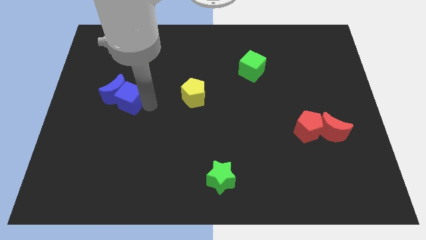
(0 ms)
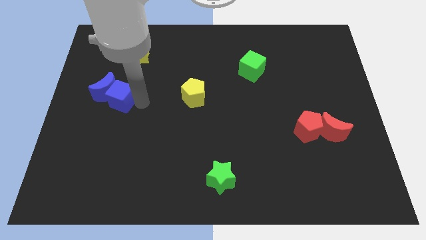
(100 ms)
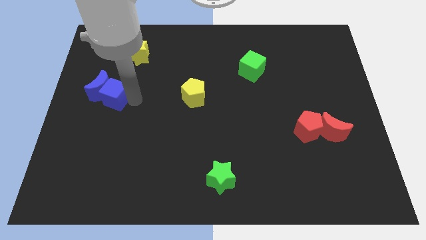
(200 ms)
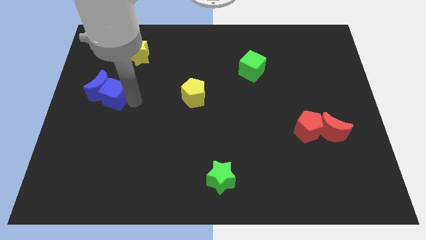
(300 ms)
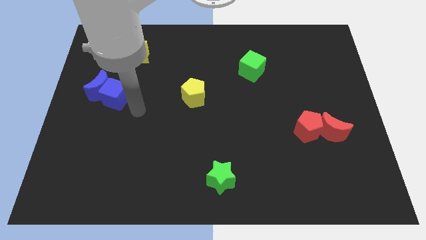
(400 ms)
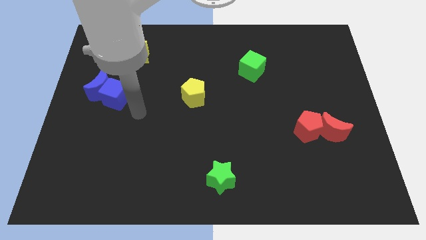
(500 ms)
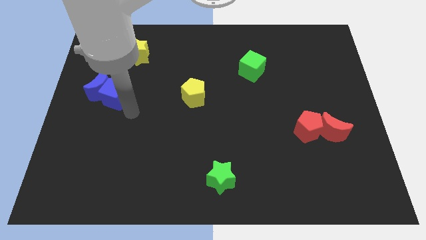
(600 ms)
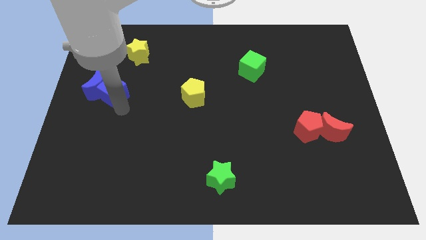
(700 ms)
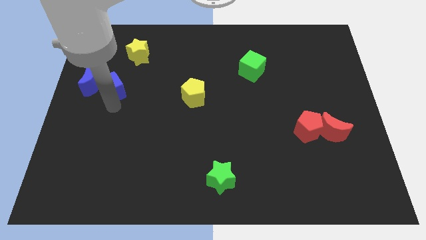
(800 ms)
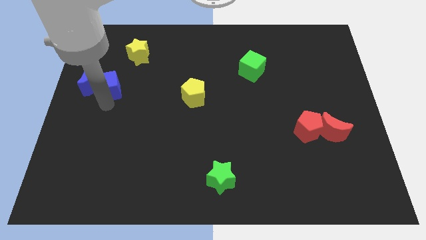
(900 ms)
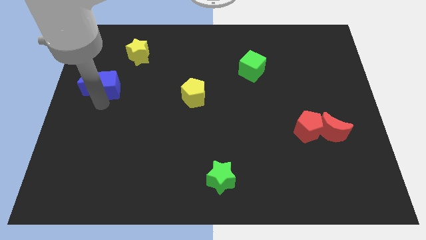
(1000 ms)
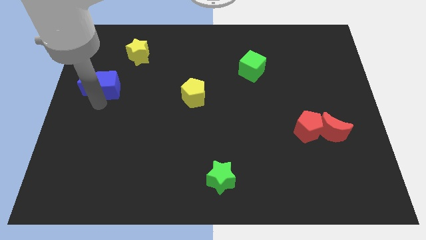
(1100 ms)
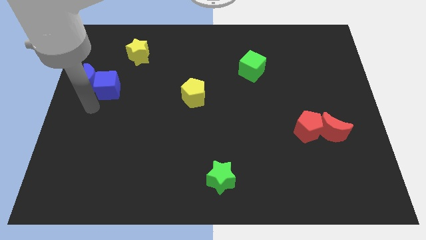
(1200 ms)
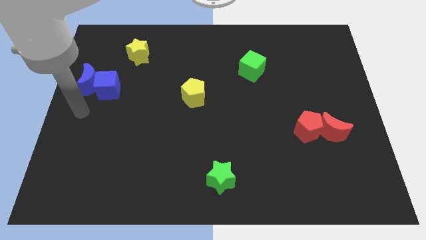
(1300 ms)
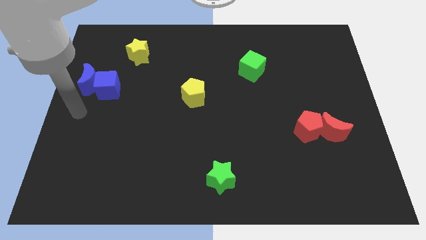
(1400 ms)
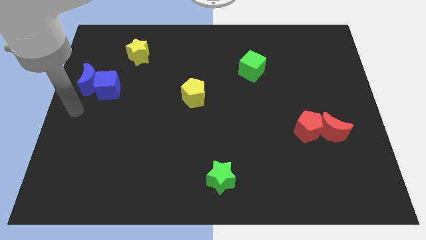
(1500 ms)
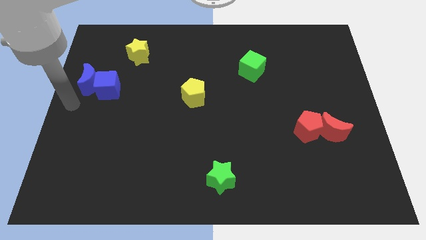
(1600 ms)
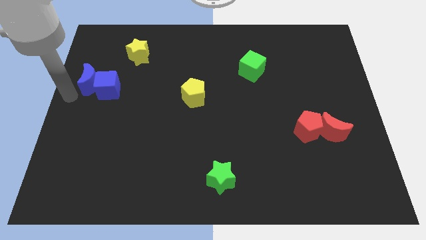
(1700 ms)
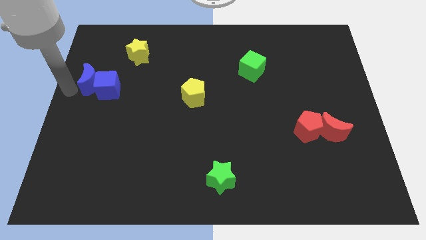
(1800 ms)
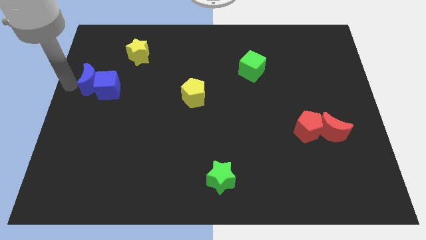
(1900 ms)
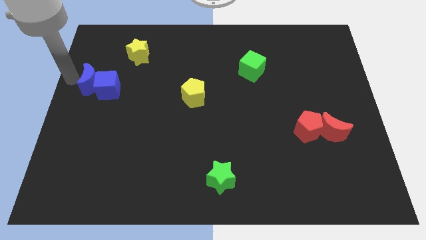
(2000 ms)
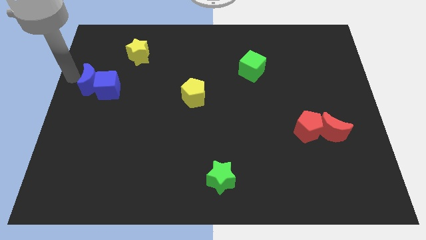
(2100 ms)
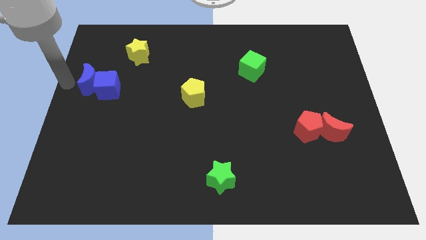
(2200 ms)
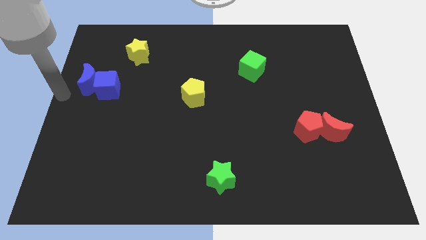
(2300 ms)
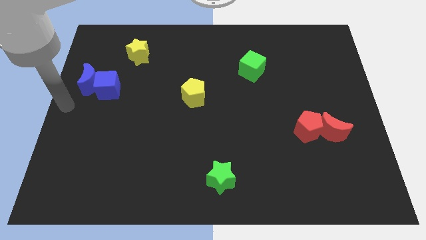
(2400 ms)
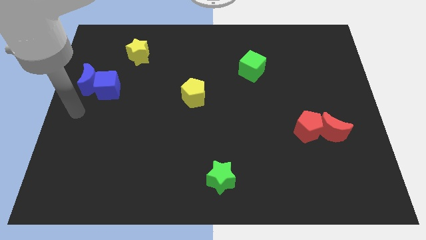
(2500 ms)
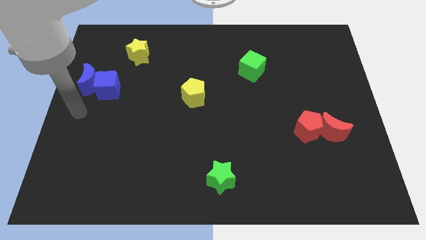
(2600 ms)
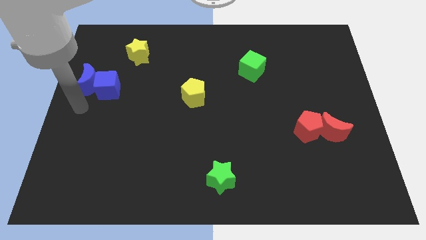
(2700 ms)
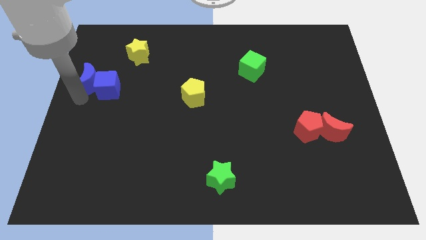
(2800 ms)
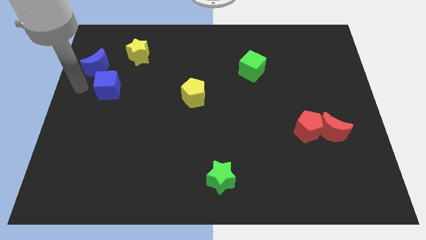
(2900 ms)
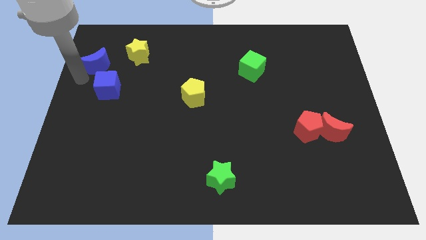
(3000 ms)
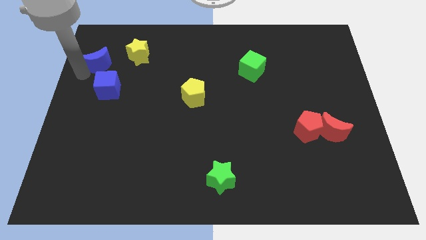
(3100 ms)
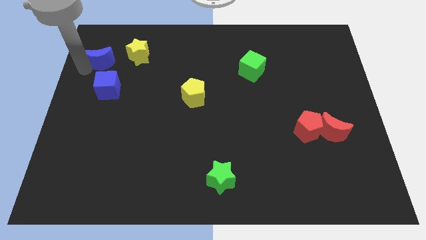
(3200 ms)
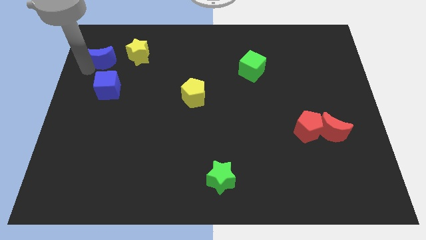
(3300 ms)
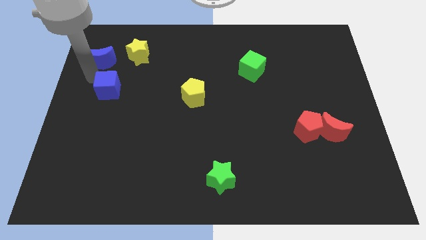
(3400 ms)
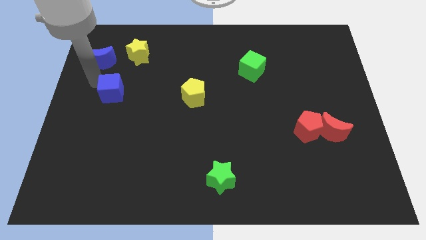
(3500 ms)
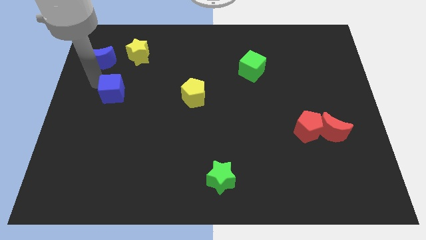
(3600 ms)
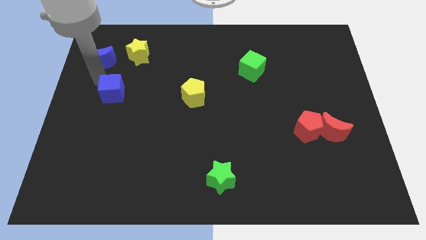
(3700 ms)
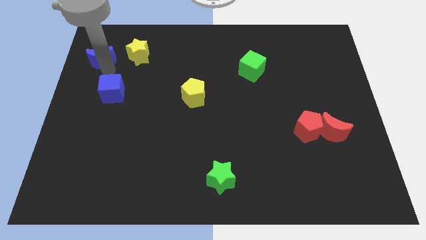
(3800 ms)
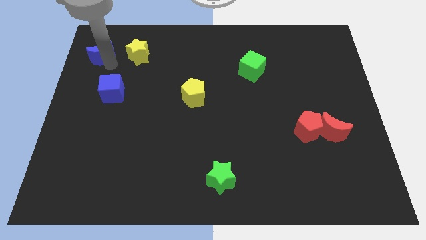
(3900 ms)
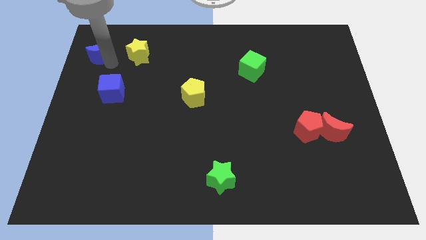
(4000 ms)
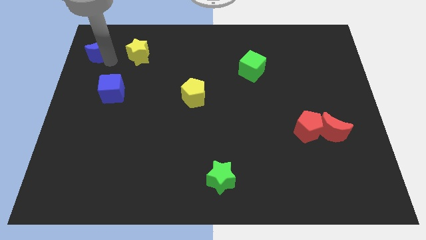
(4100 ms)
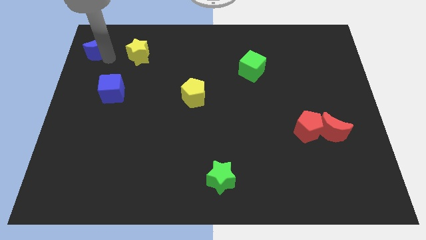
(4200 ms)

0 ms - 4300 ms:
move the blue crescent away from the blue cube

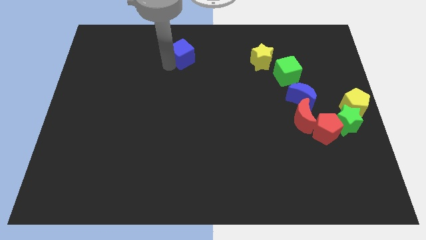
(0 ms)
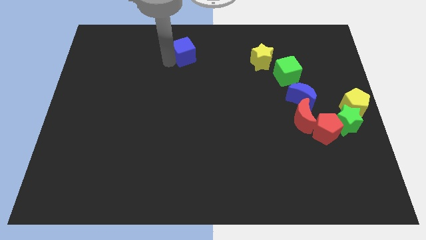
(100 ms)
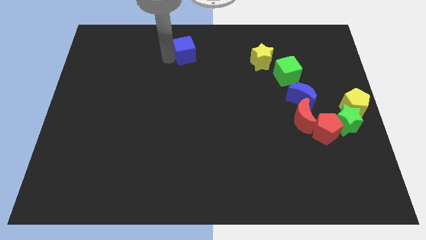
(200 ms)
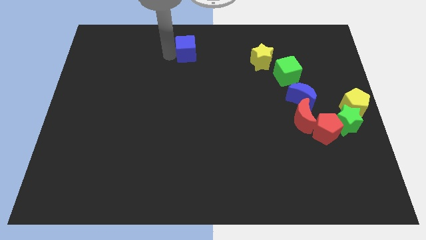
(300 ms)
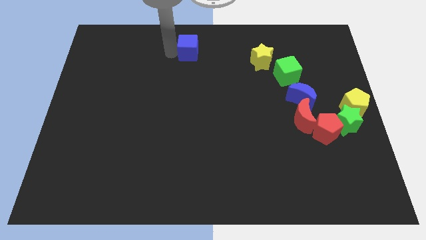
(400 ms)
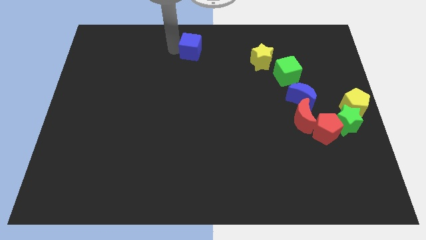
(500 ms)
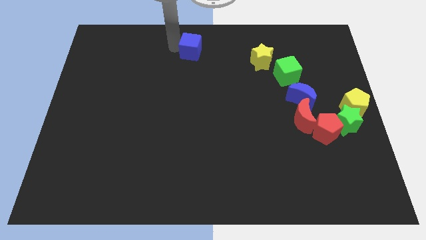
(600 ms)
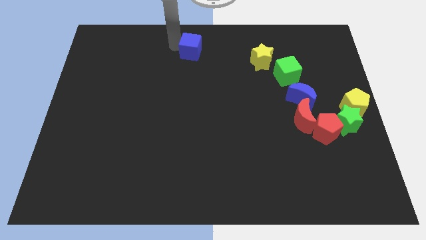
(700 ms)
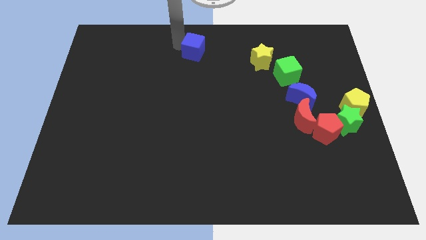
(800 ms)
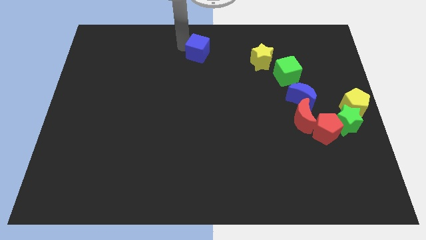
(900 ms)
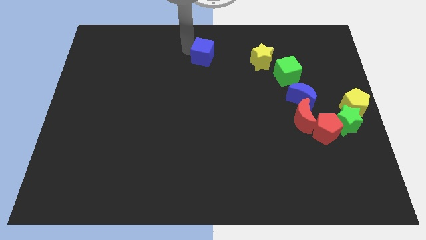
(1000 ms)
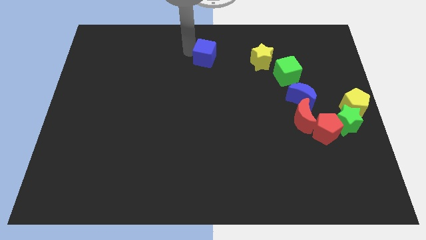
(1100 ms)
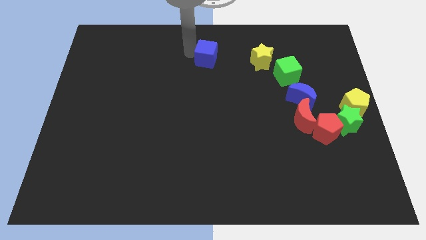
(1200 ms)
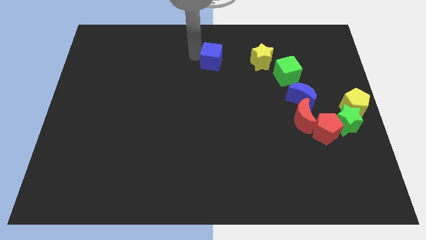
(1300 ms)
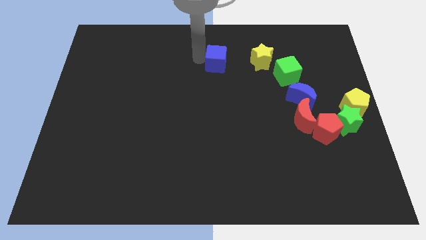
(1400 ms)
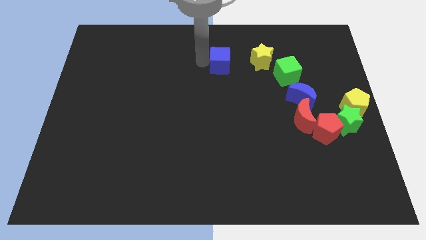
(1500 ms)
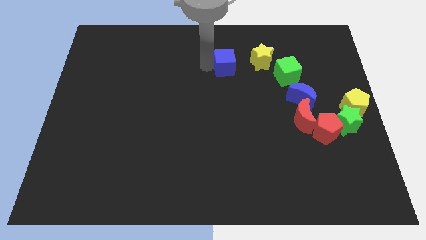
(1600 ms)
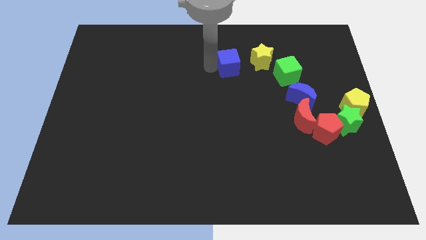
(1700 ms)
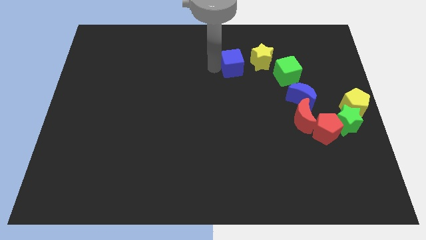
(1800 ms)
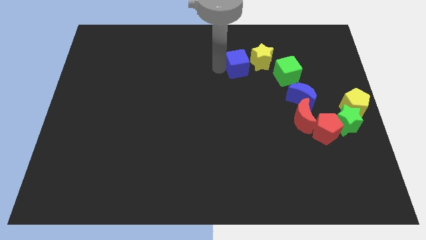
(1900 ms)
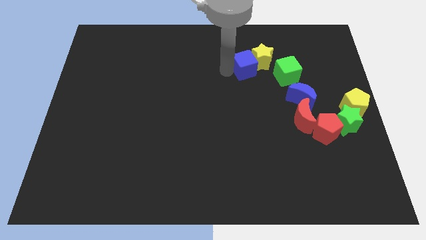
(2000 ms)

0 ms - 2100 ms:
push the blue cube towards the left of yellow star

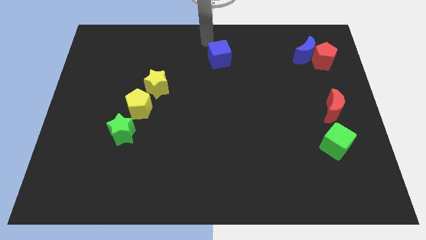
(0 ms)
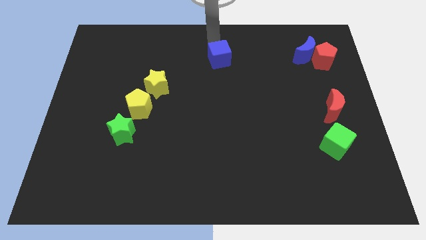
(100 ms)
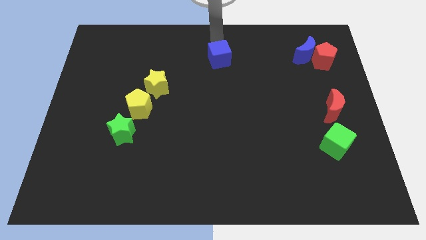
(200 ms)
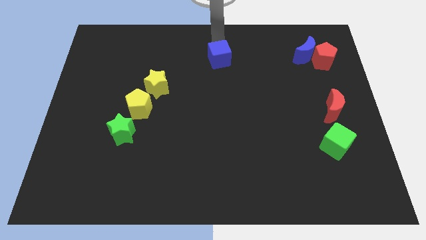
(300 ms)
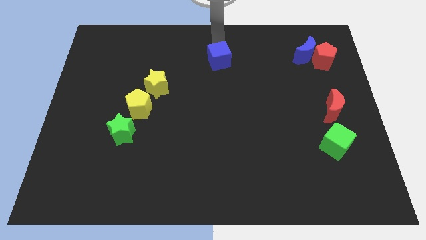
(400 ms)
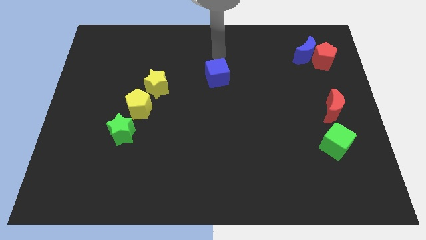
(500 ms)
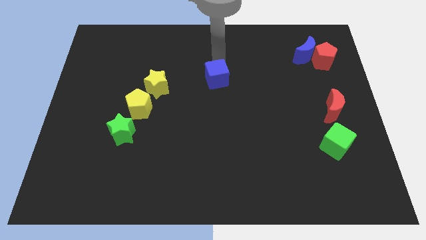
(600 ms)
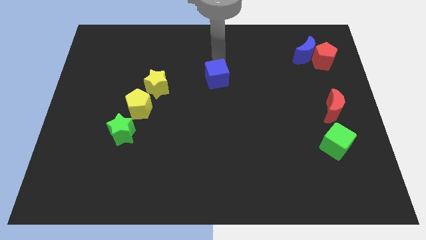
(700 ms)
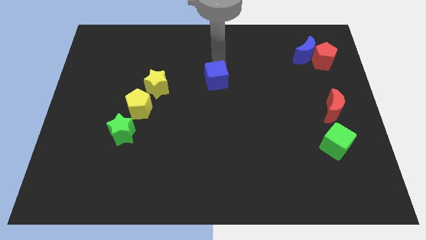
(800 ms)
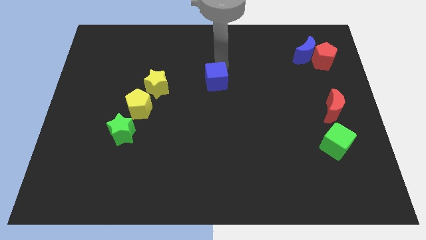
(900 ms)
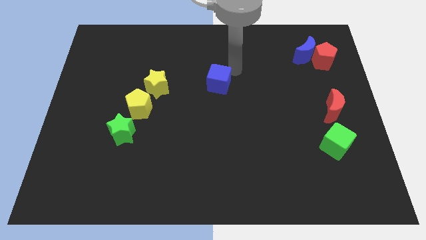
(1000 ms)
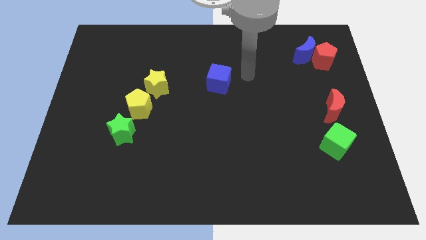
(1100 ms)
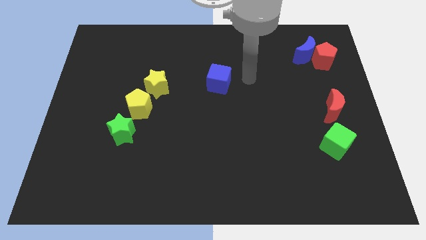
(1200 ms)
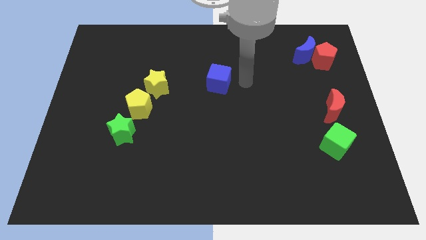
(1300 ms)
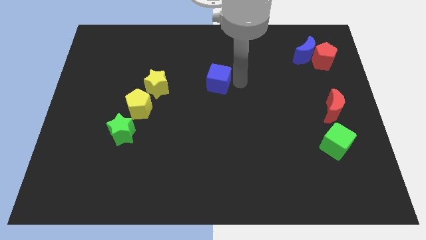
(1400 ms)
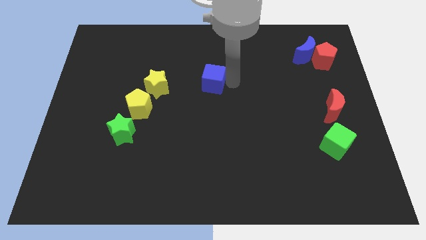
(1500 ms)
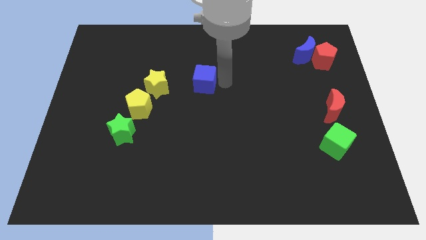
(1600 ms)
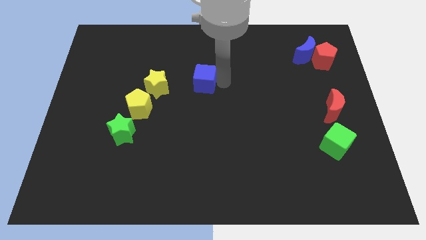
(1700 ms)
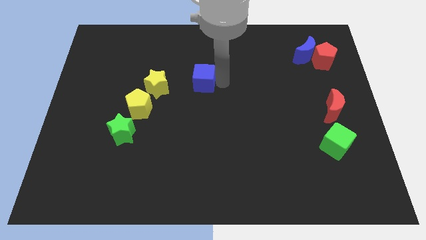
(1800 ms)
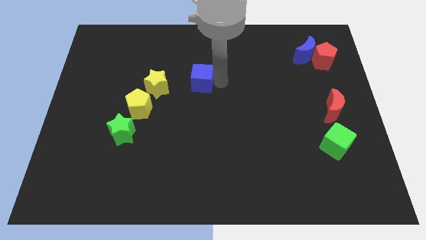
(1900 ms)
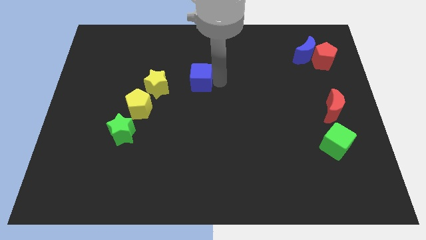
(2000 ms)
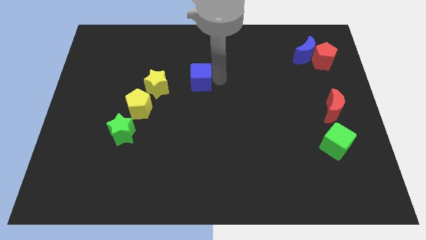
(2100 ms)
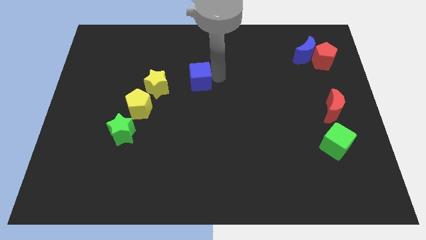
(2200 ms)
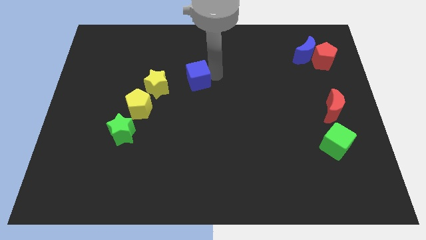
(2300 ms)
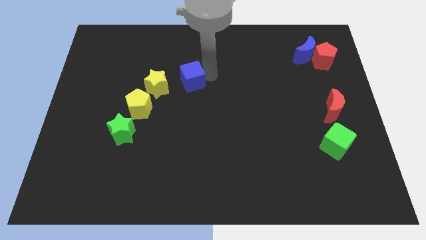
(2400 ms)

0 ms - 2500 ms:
push the blue cube towards yellow star

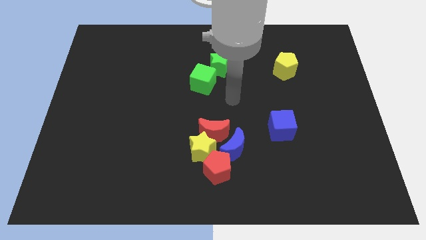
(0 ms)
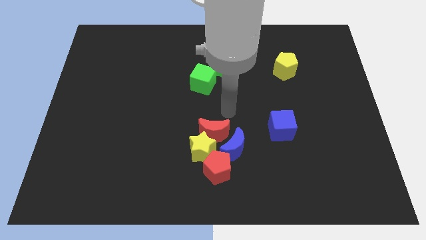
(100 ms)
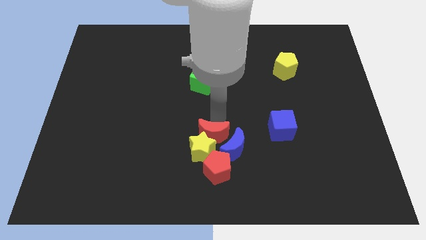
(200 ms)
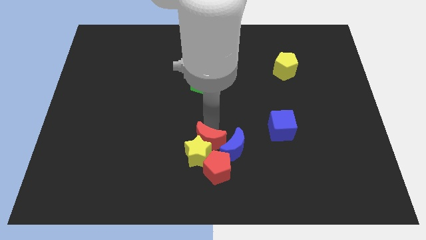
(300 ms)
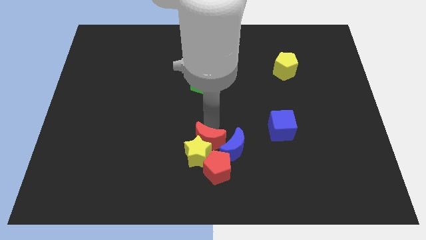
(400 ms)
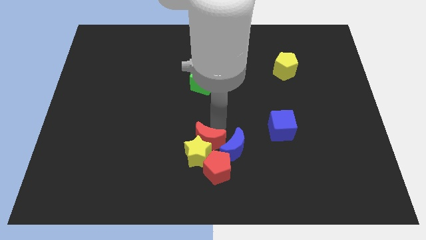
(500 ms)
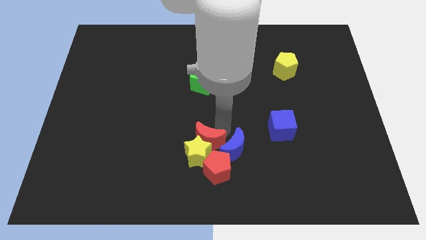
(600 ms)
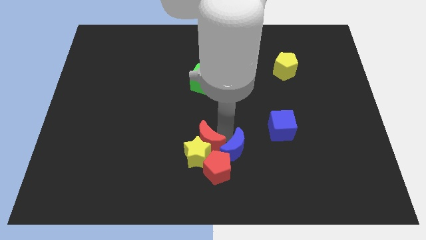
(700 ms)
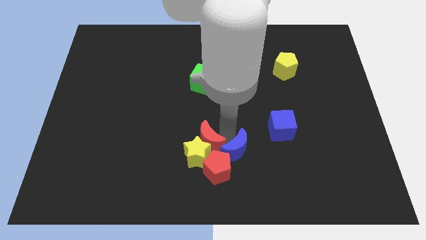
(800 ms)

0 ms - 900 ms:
push red moon downwards
